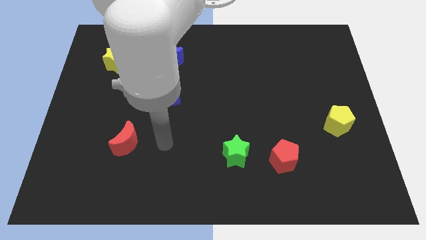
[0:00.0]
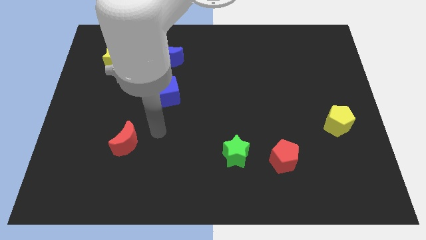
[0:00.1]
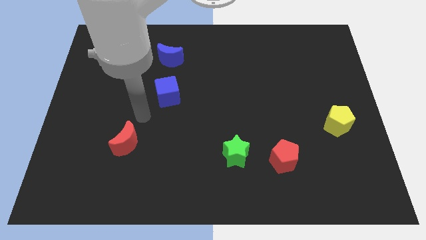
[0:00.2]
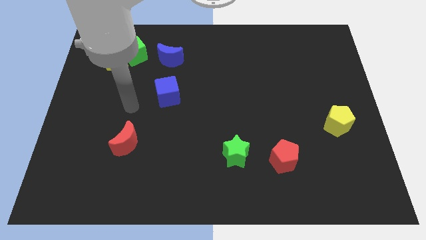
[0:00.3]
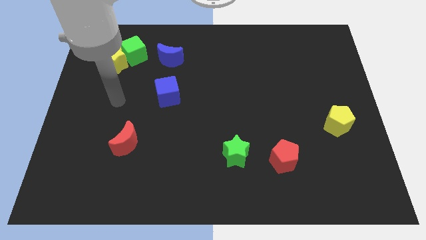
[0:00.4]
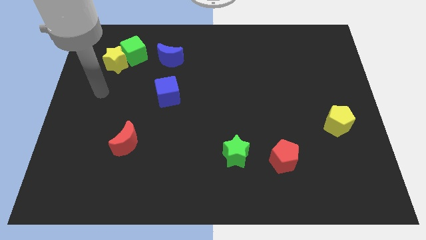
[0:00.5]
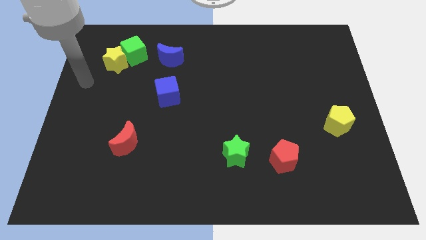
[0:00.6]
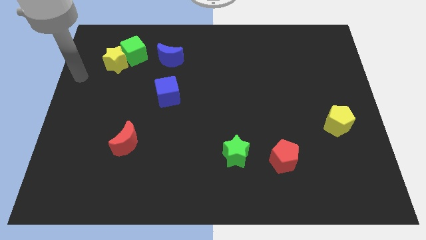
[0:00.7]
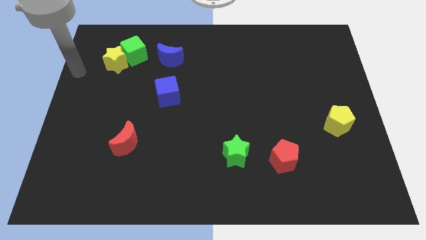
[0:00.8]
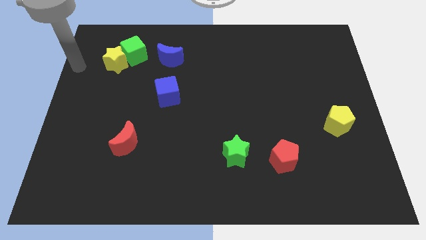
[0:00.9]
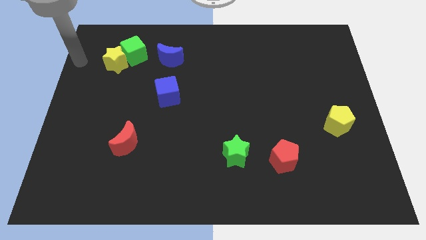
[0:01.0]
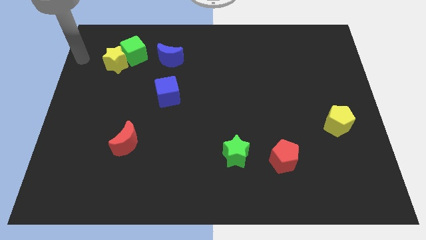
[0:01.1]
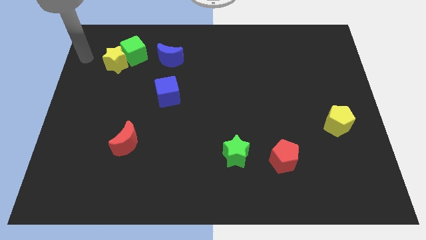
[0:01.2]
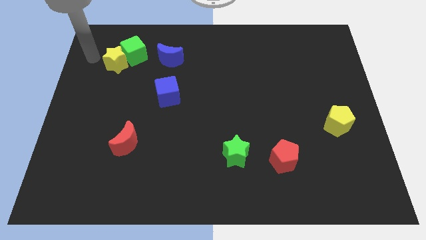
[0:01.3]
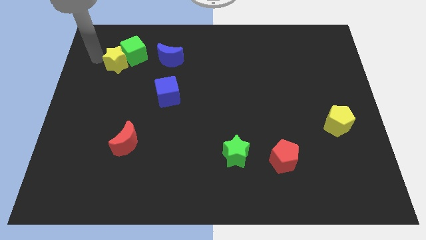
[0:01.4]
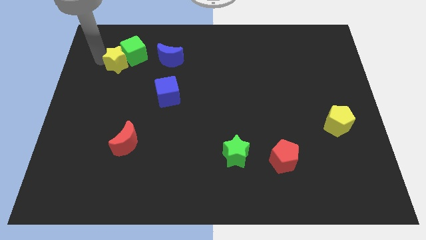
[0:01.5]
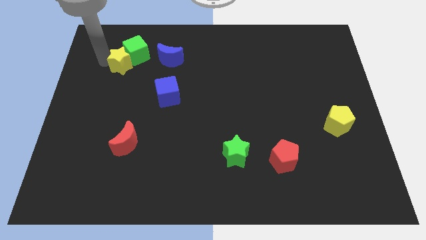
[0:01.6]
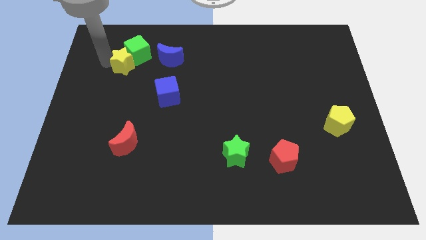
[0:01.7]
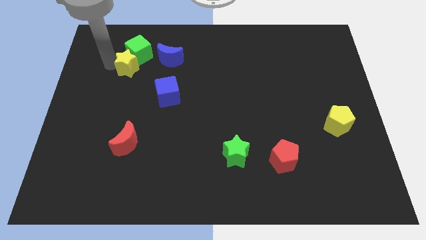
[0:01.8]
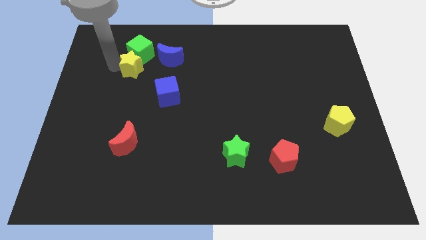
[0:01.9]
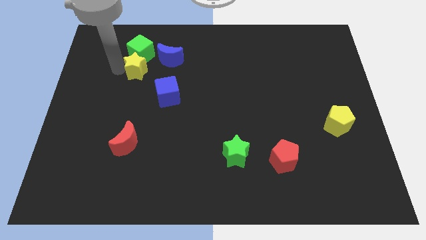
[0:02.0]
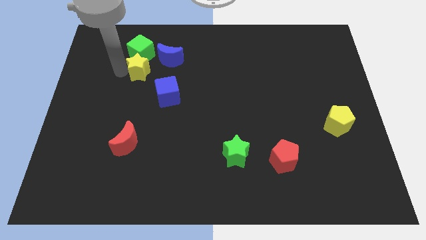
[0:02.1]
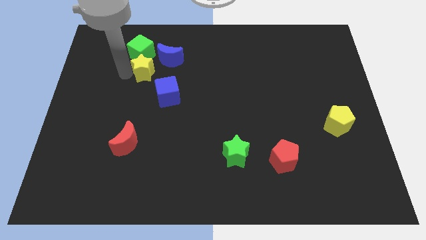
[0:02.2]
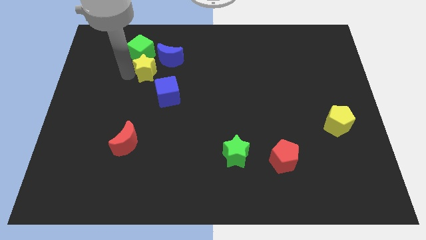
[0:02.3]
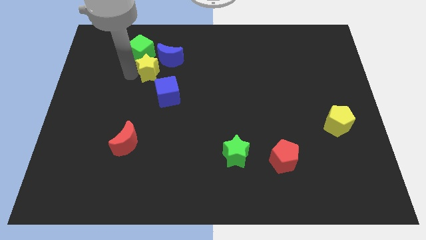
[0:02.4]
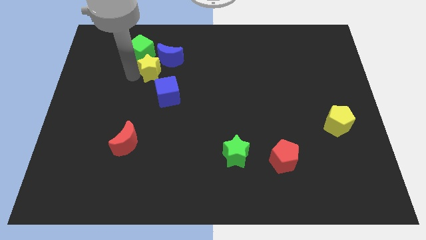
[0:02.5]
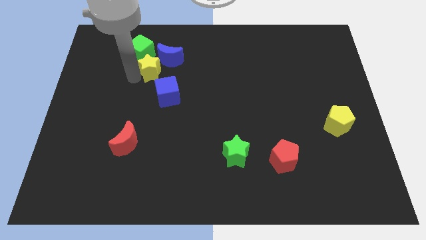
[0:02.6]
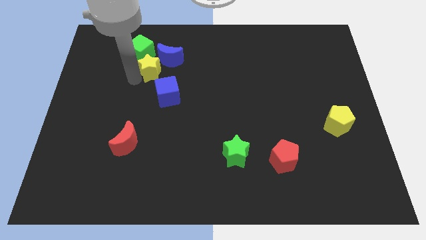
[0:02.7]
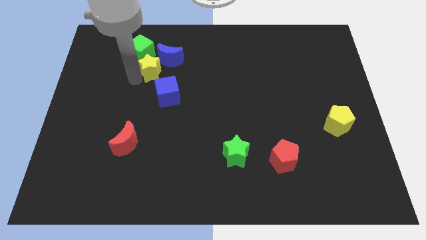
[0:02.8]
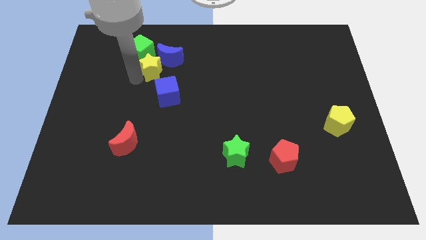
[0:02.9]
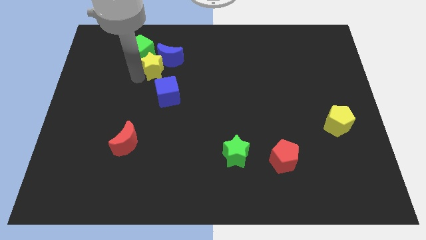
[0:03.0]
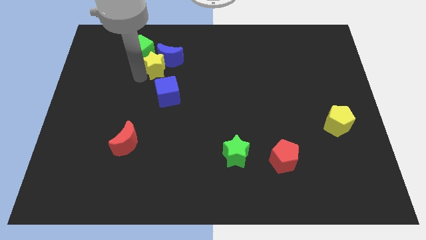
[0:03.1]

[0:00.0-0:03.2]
move the yellow star towards the blue moon

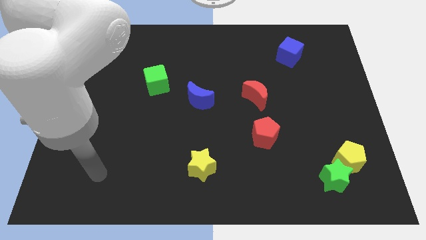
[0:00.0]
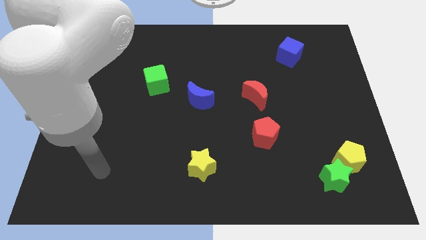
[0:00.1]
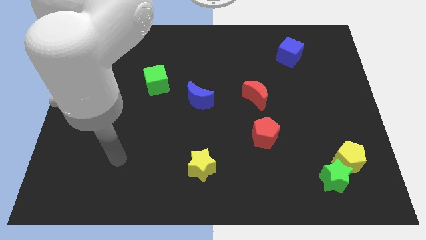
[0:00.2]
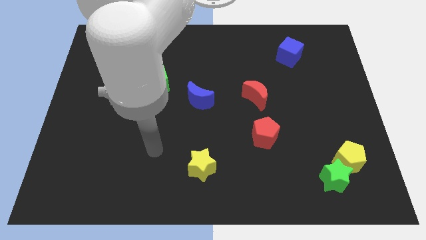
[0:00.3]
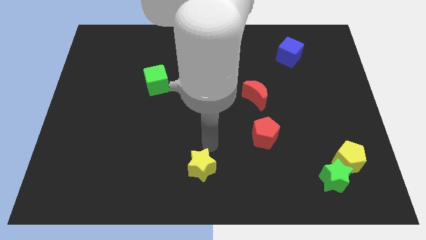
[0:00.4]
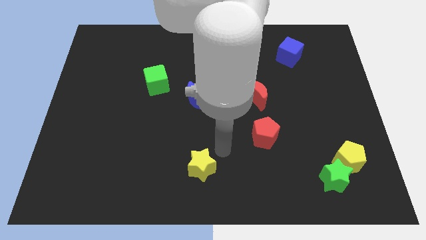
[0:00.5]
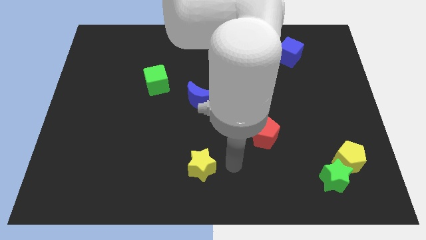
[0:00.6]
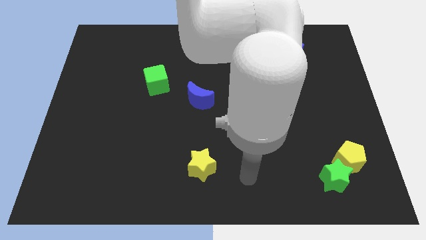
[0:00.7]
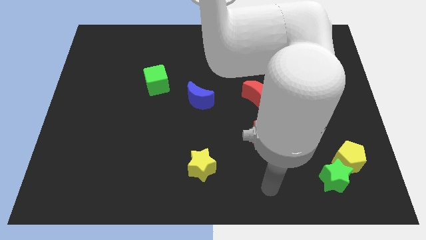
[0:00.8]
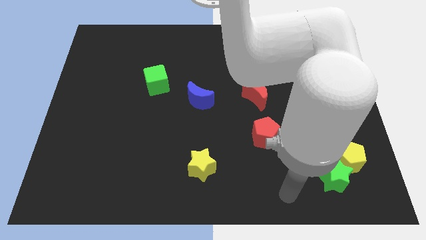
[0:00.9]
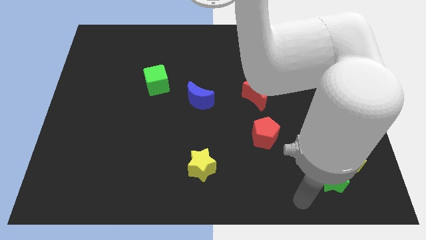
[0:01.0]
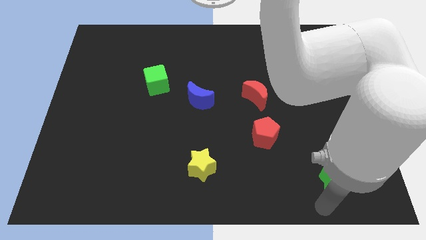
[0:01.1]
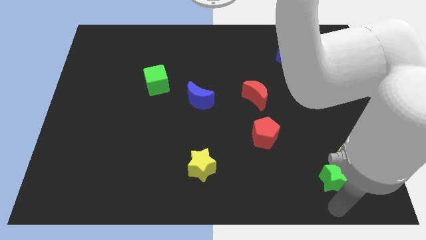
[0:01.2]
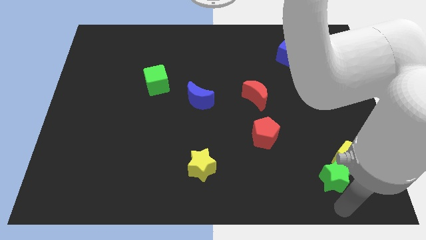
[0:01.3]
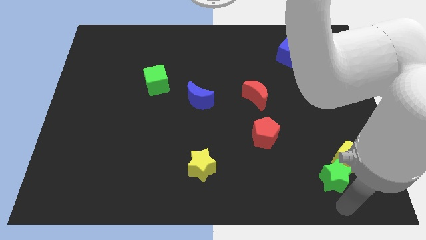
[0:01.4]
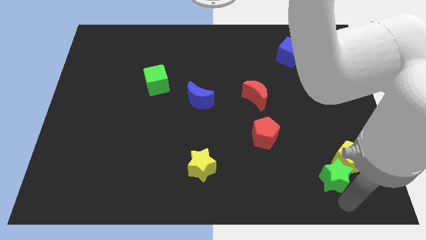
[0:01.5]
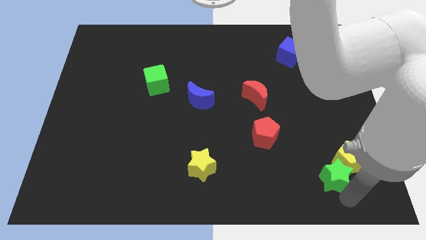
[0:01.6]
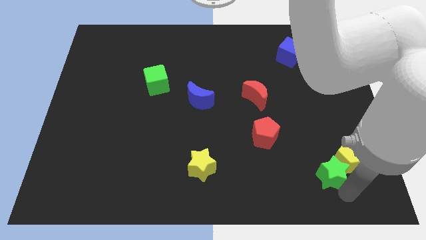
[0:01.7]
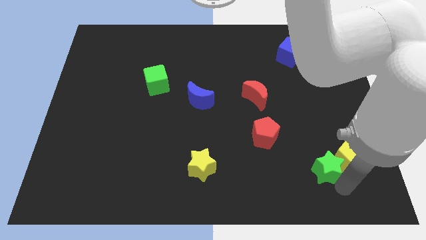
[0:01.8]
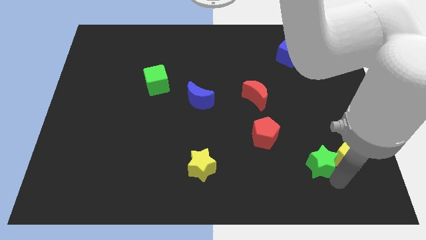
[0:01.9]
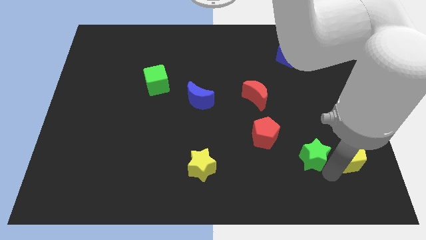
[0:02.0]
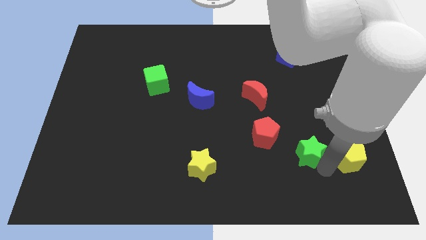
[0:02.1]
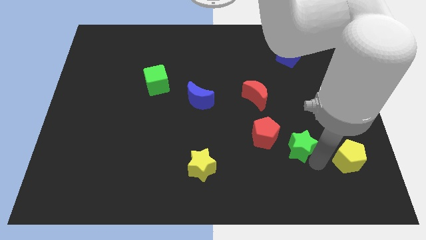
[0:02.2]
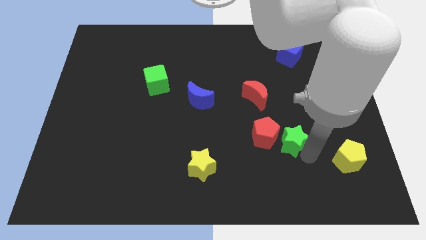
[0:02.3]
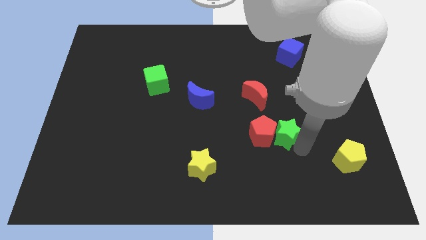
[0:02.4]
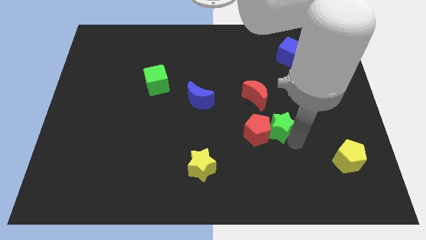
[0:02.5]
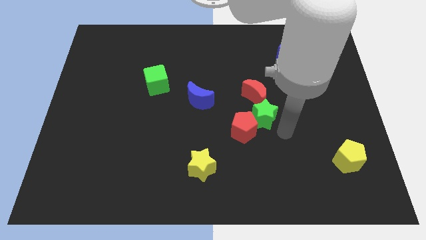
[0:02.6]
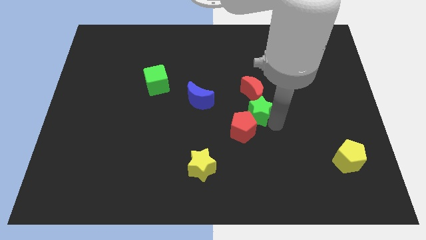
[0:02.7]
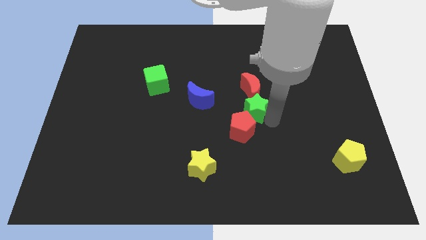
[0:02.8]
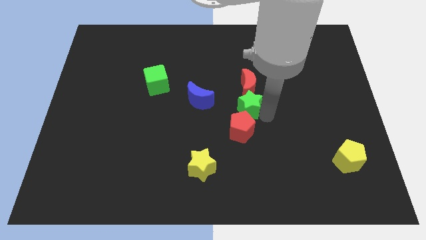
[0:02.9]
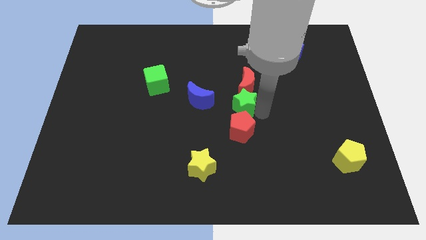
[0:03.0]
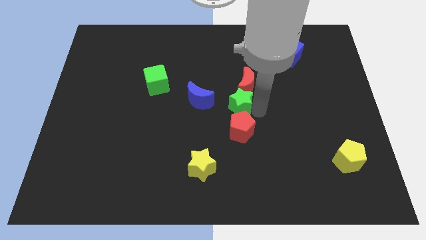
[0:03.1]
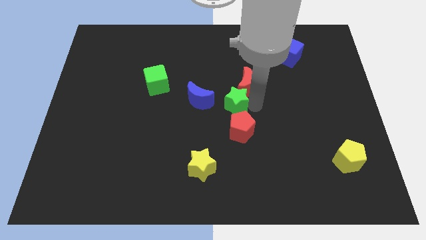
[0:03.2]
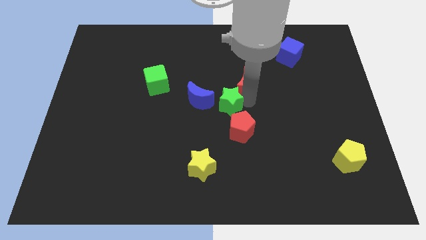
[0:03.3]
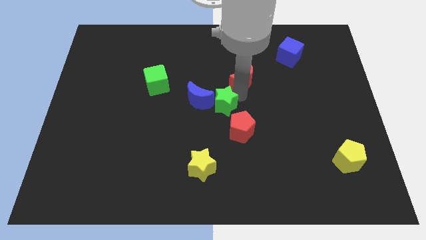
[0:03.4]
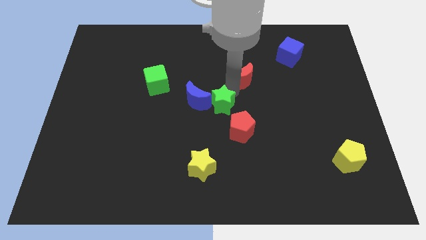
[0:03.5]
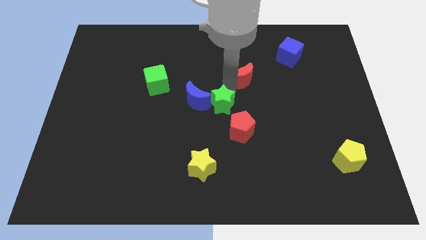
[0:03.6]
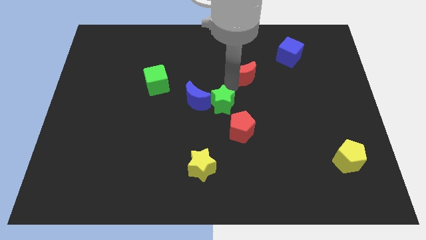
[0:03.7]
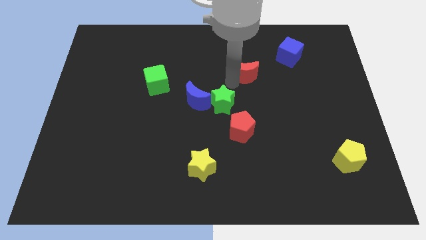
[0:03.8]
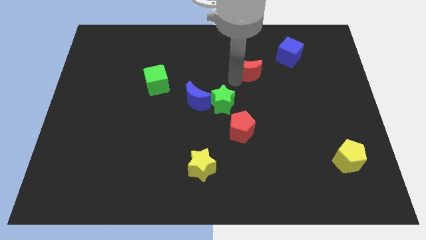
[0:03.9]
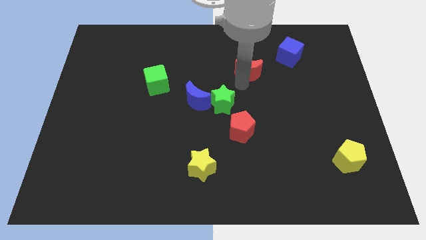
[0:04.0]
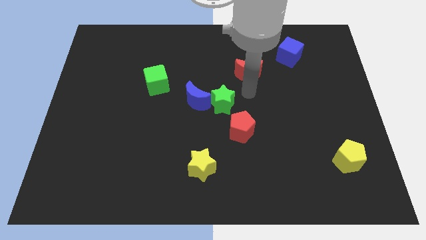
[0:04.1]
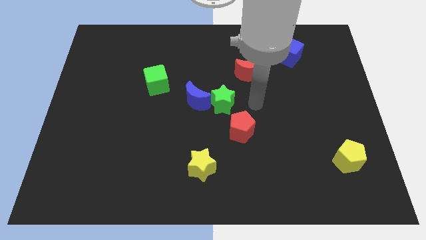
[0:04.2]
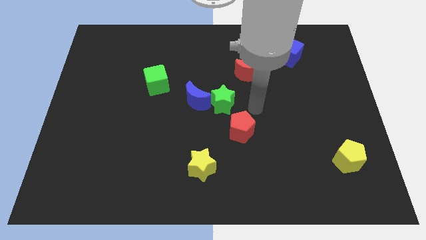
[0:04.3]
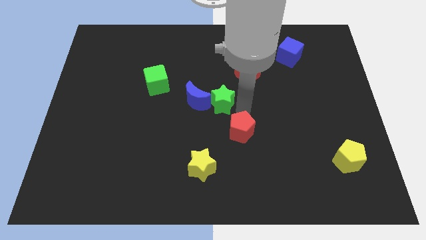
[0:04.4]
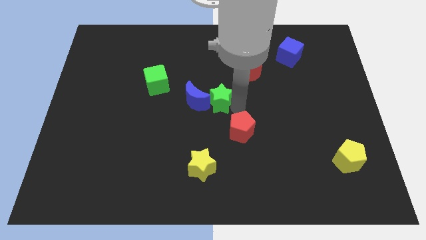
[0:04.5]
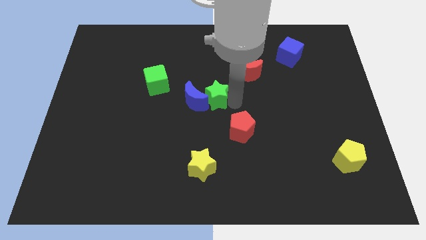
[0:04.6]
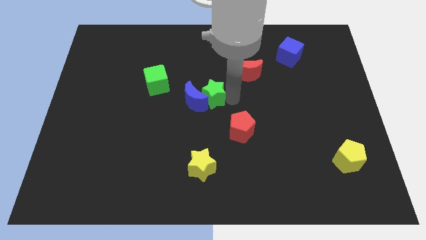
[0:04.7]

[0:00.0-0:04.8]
put the green star close to the blue moon

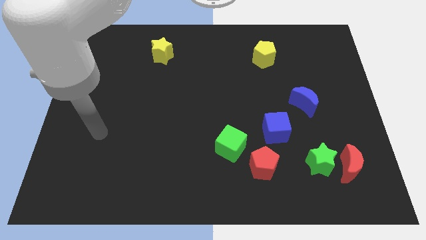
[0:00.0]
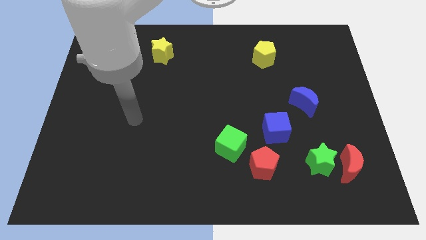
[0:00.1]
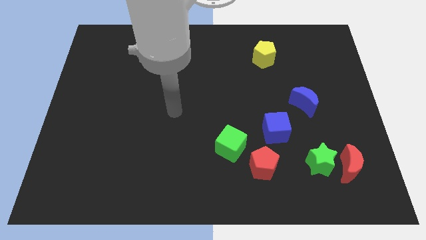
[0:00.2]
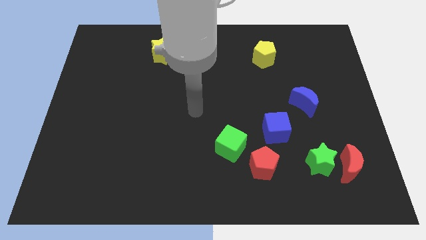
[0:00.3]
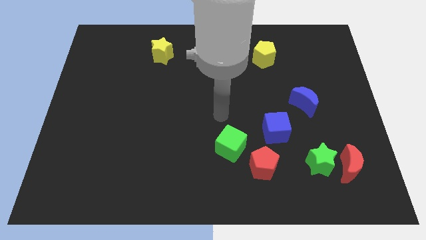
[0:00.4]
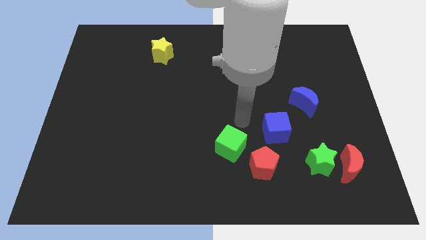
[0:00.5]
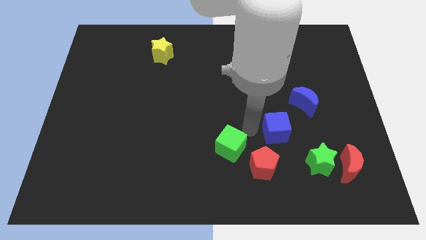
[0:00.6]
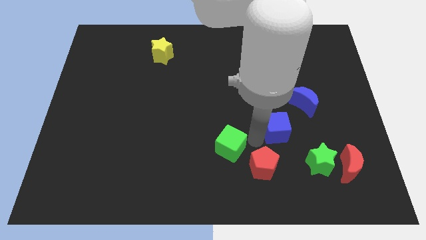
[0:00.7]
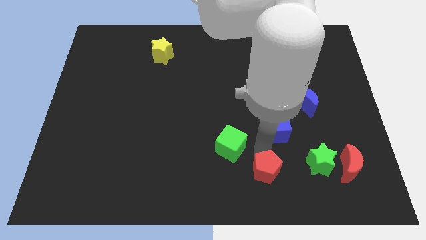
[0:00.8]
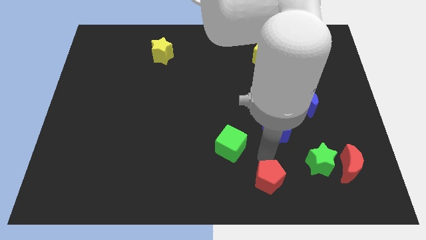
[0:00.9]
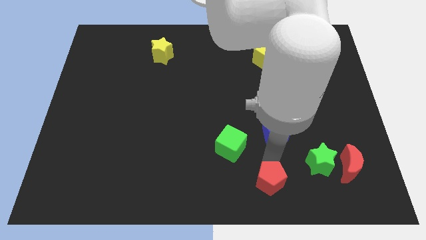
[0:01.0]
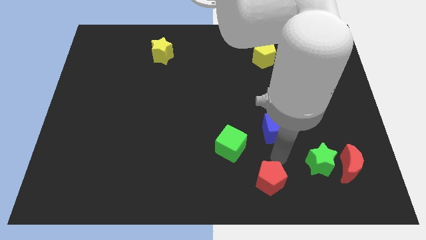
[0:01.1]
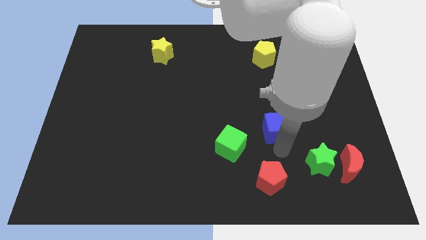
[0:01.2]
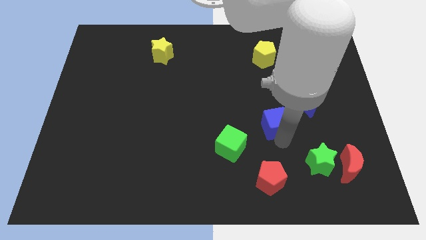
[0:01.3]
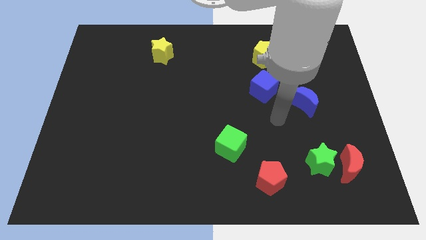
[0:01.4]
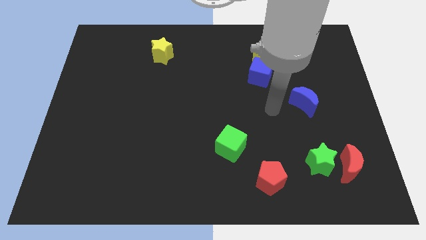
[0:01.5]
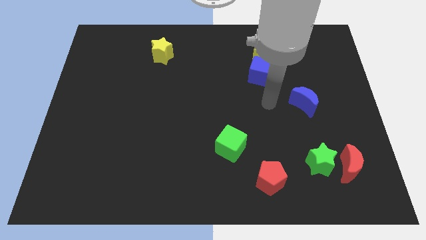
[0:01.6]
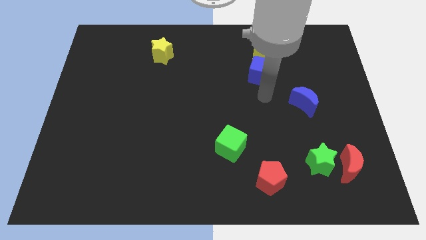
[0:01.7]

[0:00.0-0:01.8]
push the blue cube next to the yellow pentagon
